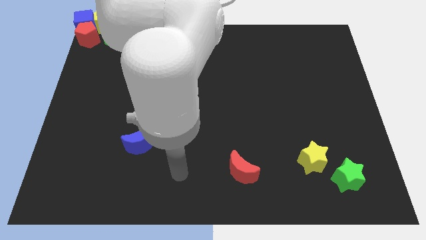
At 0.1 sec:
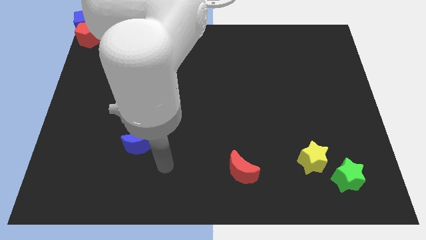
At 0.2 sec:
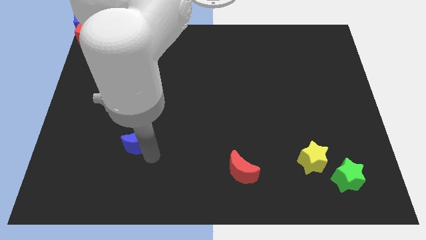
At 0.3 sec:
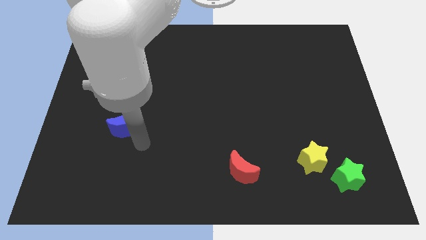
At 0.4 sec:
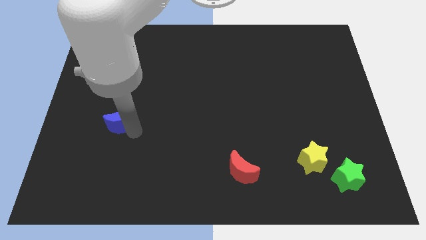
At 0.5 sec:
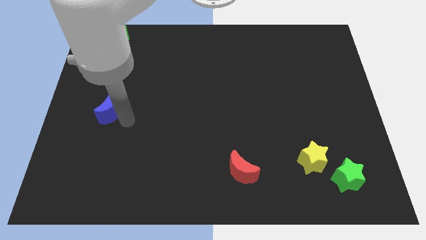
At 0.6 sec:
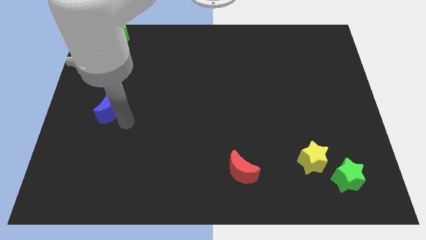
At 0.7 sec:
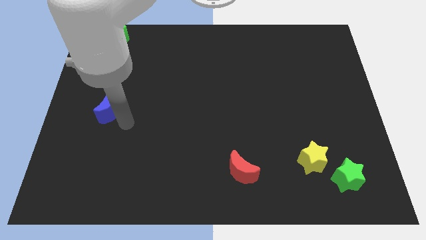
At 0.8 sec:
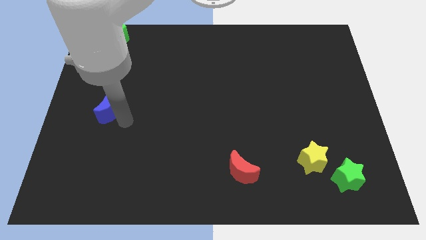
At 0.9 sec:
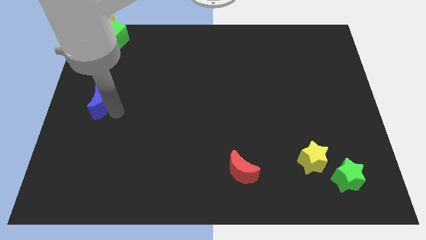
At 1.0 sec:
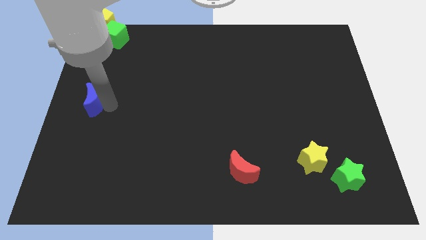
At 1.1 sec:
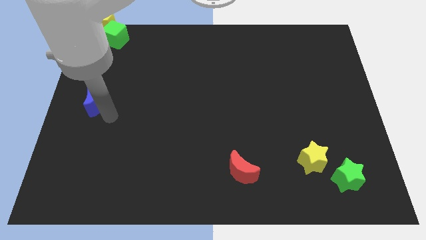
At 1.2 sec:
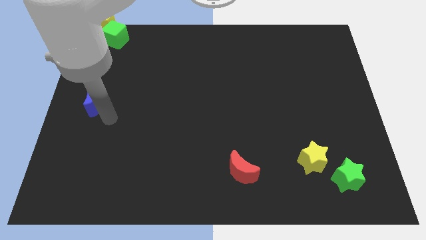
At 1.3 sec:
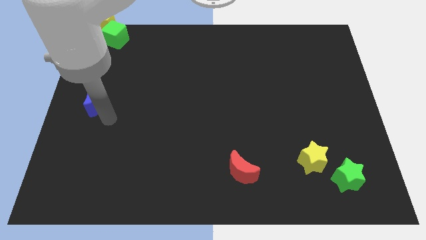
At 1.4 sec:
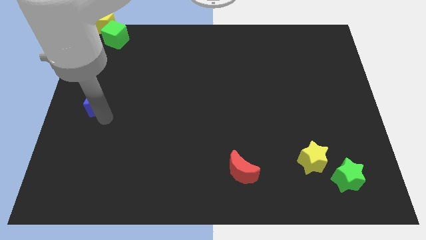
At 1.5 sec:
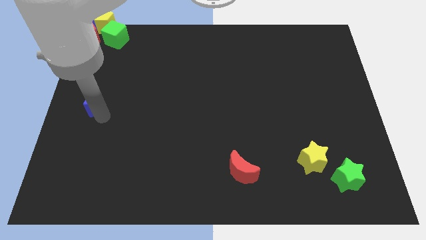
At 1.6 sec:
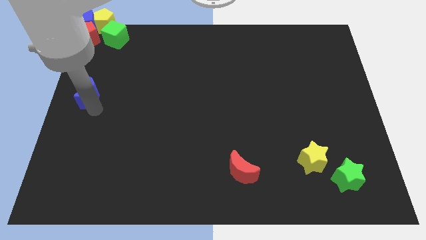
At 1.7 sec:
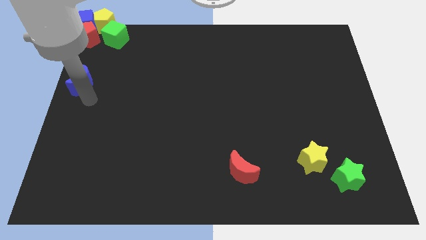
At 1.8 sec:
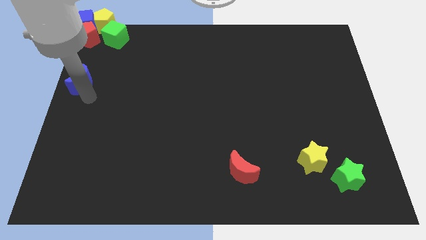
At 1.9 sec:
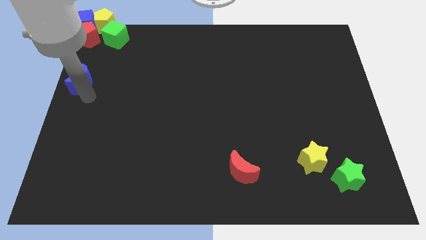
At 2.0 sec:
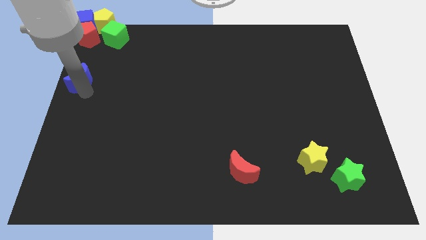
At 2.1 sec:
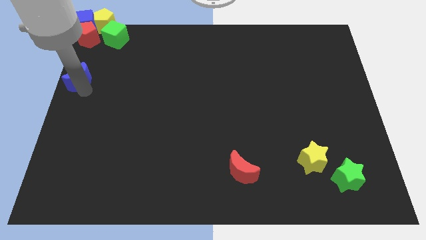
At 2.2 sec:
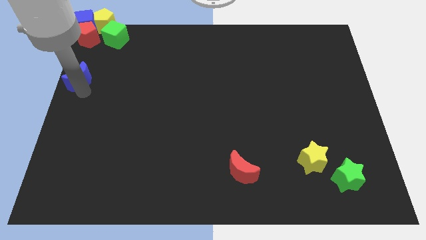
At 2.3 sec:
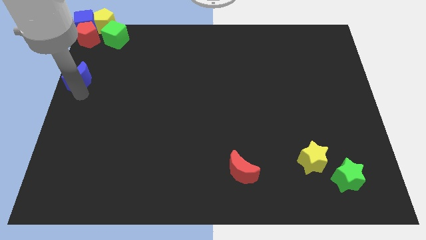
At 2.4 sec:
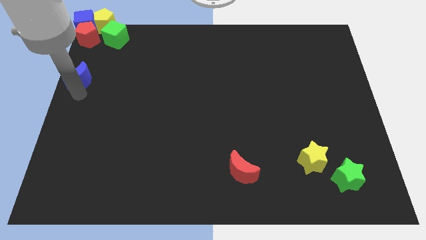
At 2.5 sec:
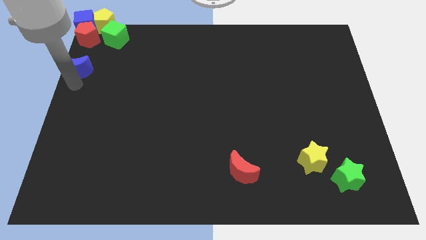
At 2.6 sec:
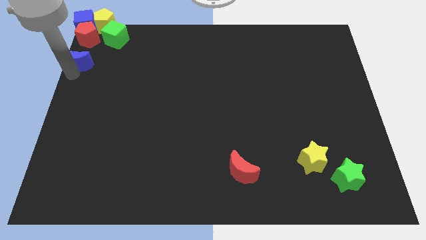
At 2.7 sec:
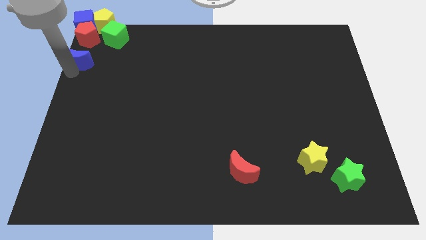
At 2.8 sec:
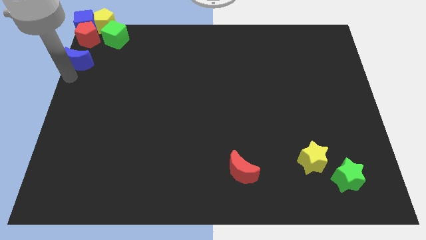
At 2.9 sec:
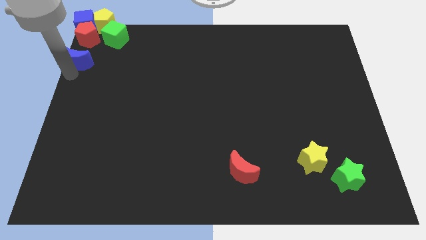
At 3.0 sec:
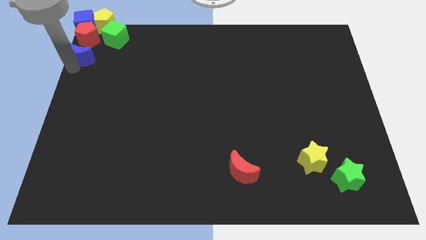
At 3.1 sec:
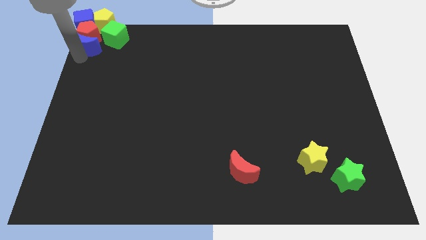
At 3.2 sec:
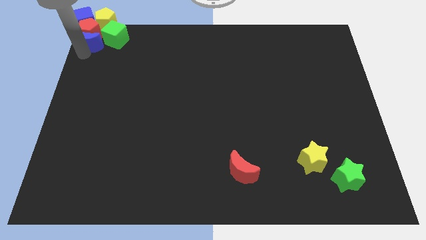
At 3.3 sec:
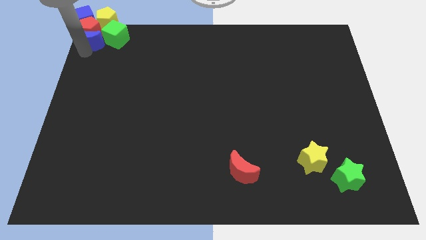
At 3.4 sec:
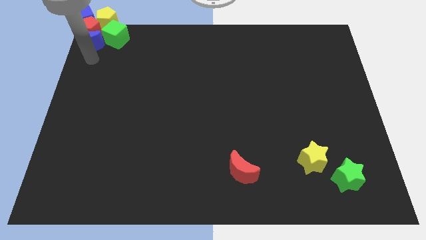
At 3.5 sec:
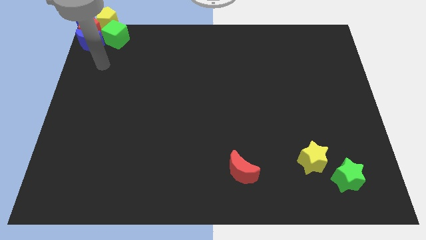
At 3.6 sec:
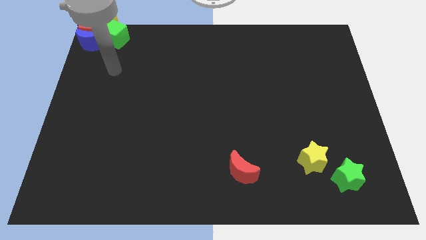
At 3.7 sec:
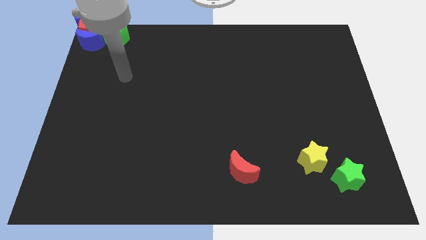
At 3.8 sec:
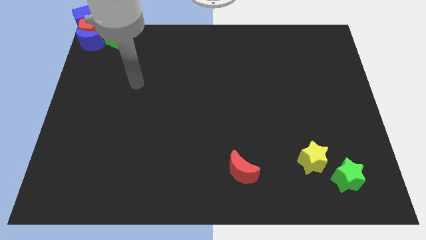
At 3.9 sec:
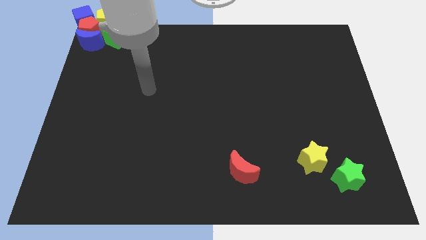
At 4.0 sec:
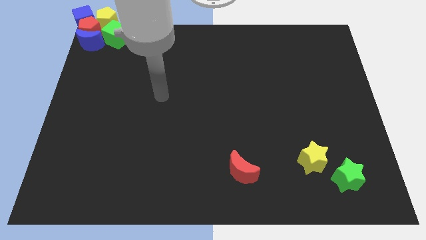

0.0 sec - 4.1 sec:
push the blue crescent to the top left corner

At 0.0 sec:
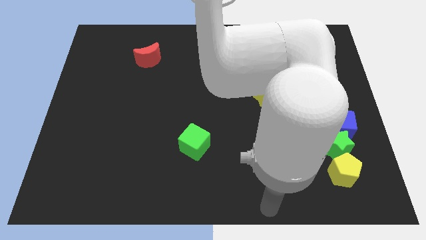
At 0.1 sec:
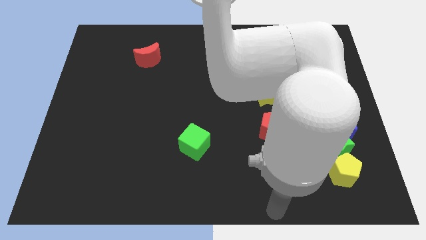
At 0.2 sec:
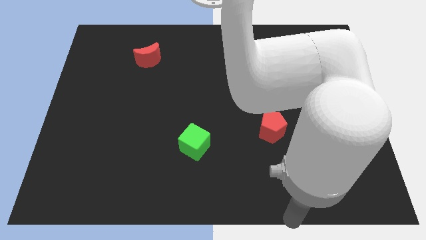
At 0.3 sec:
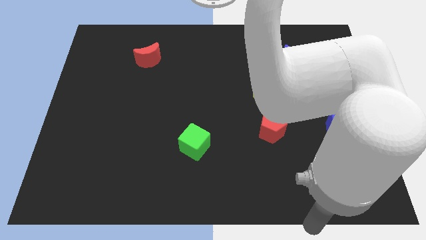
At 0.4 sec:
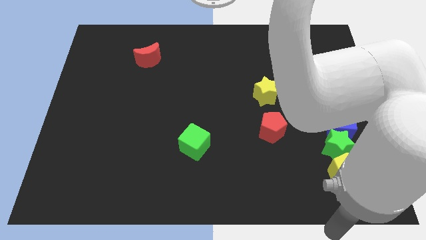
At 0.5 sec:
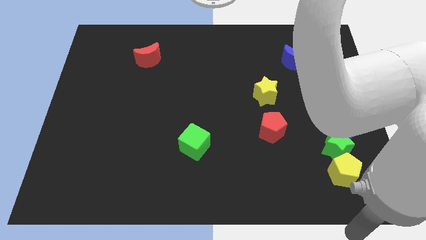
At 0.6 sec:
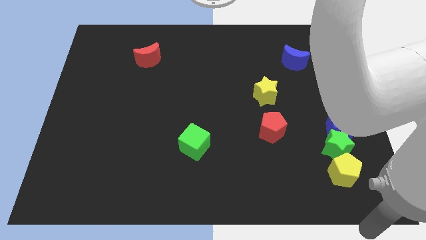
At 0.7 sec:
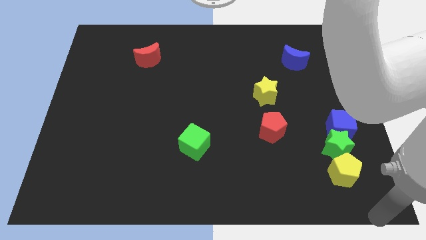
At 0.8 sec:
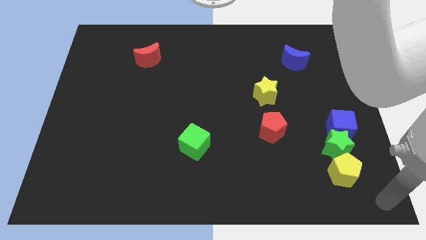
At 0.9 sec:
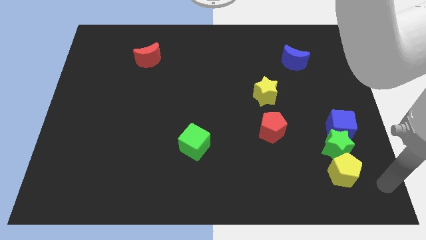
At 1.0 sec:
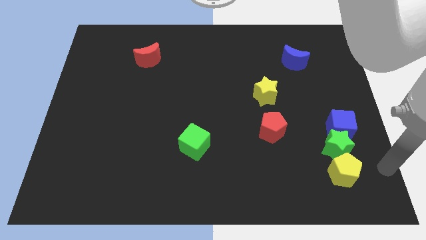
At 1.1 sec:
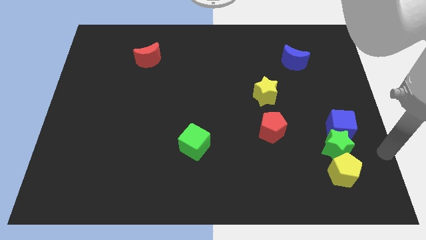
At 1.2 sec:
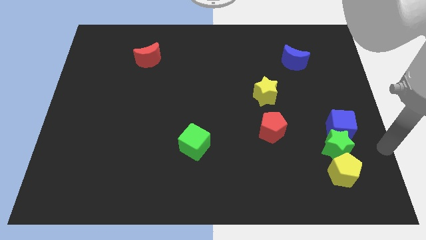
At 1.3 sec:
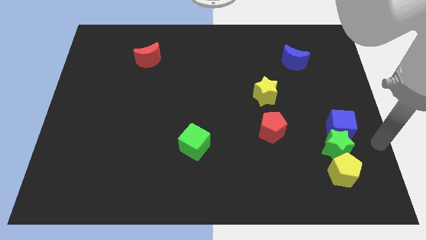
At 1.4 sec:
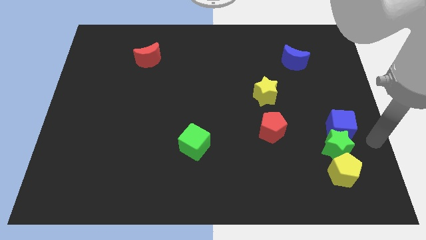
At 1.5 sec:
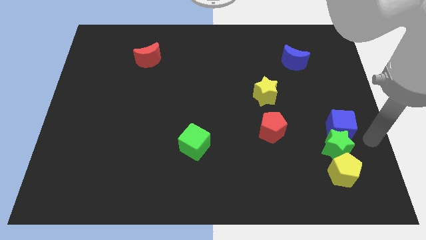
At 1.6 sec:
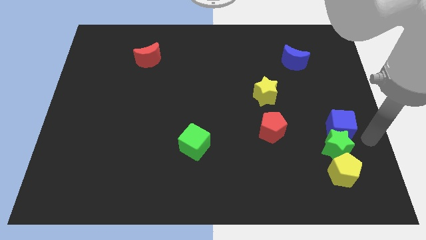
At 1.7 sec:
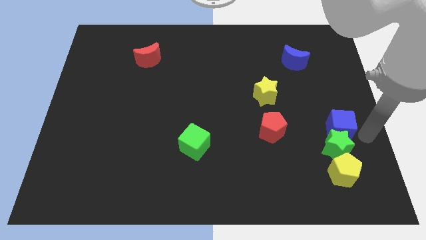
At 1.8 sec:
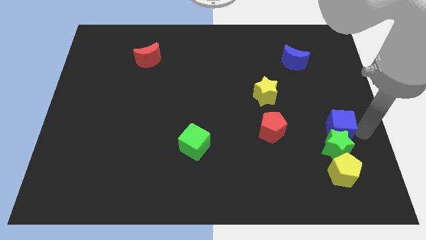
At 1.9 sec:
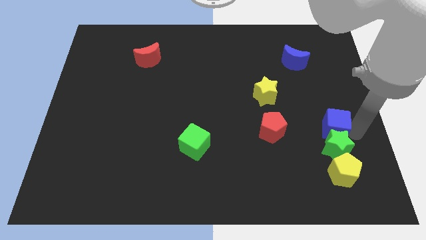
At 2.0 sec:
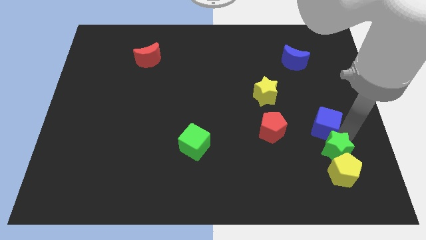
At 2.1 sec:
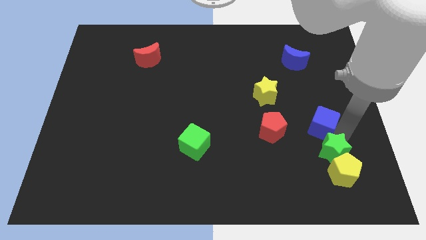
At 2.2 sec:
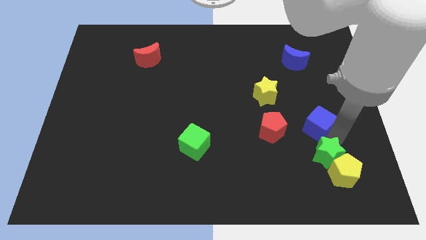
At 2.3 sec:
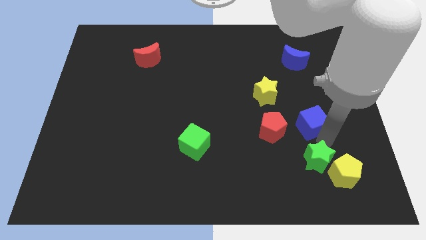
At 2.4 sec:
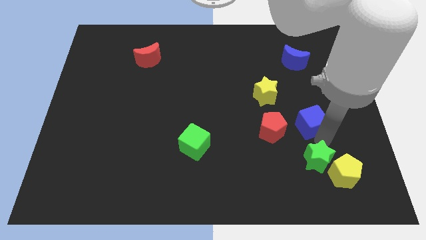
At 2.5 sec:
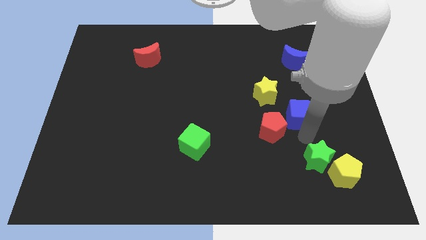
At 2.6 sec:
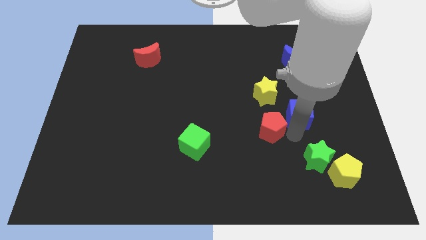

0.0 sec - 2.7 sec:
separate the blue cube with green star

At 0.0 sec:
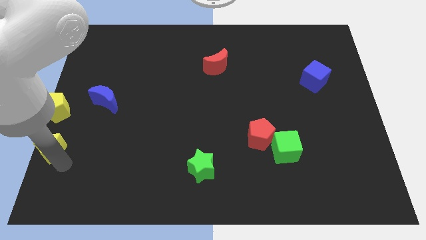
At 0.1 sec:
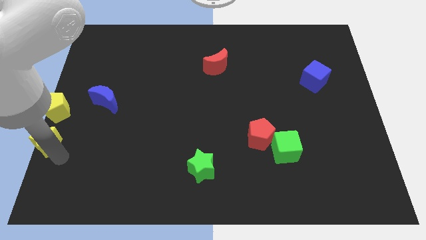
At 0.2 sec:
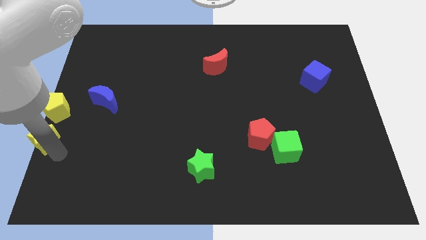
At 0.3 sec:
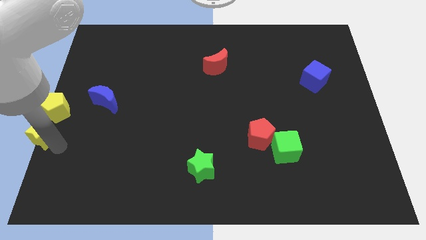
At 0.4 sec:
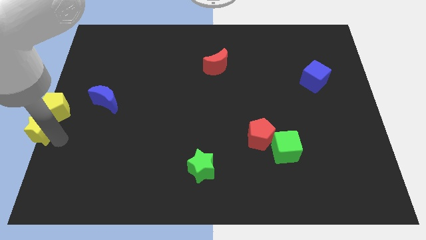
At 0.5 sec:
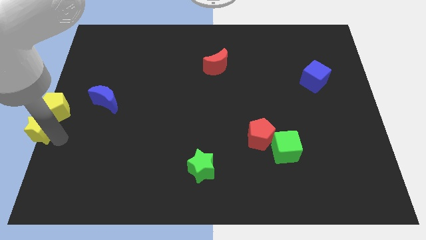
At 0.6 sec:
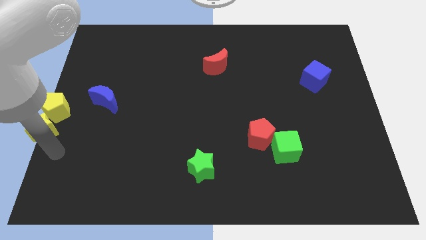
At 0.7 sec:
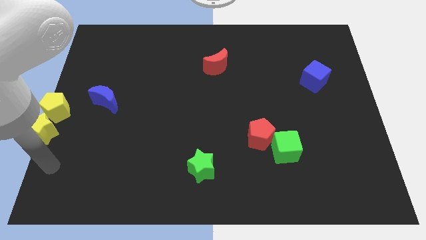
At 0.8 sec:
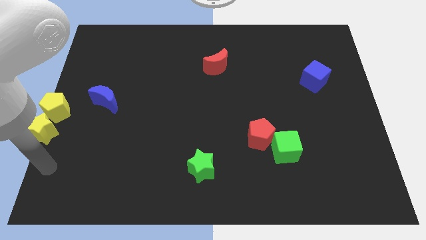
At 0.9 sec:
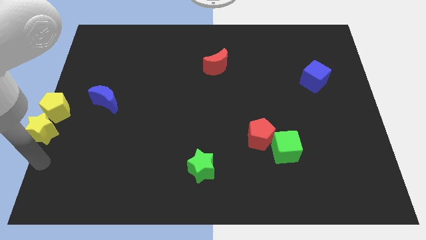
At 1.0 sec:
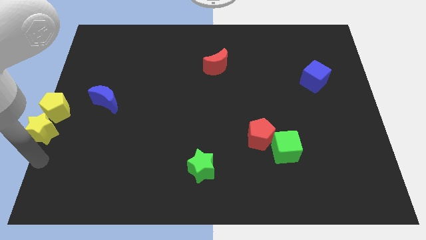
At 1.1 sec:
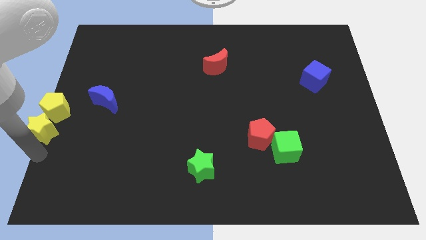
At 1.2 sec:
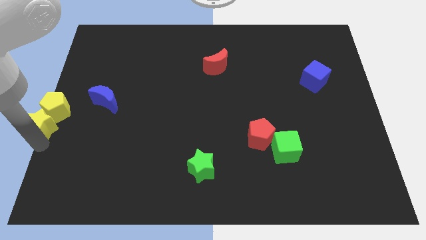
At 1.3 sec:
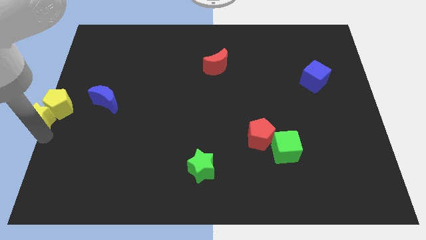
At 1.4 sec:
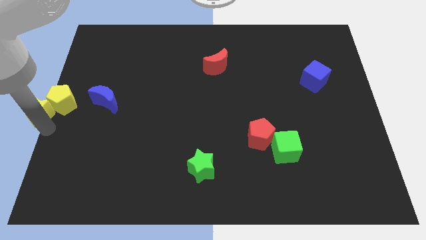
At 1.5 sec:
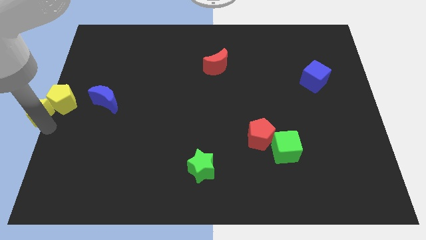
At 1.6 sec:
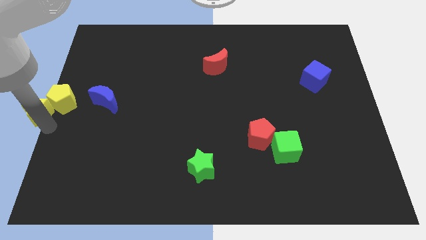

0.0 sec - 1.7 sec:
put the yellow star in to yellow pentagon

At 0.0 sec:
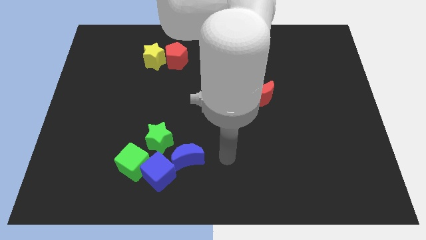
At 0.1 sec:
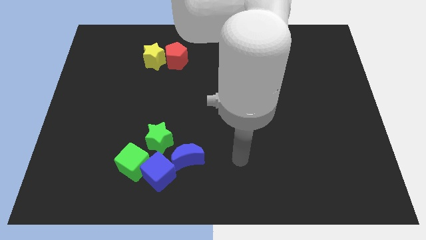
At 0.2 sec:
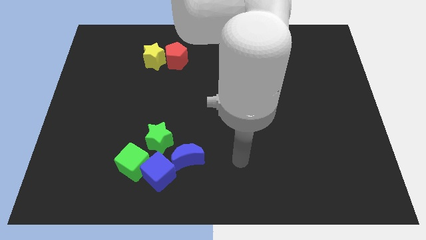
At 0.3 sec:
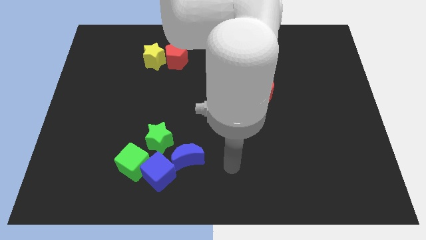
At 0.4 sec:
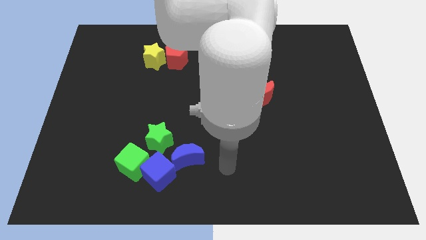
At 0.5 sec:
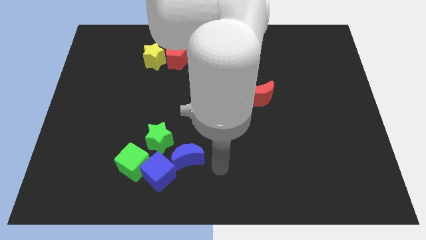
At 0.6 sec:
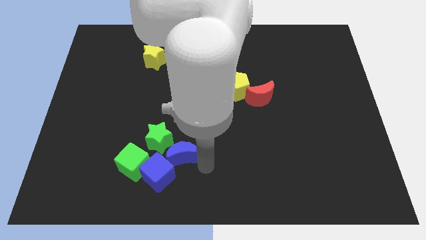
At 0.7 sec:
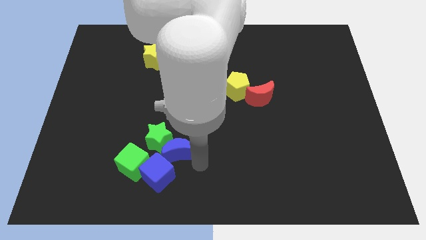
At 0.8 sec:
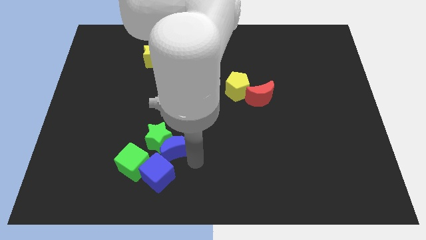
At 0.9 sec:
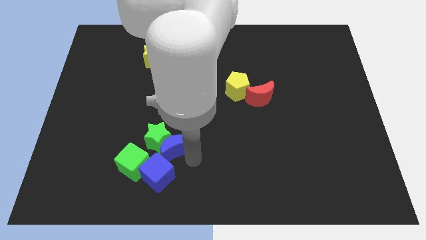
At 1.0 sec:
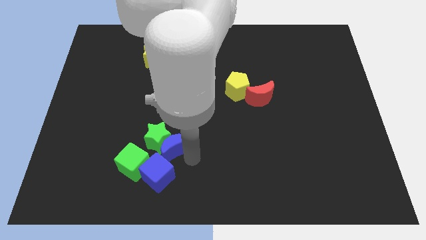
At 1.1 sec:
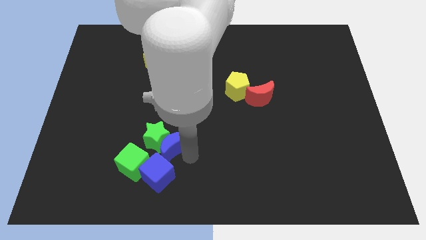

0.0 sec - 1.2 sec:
move the blue crescent into the green star
